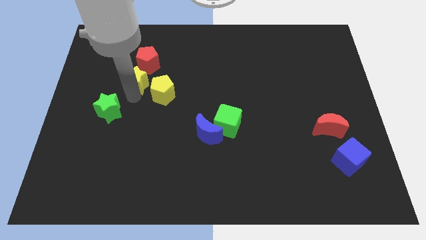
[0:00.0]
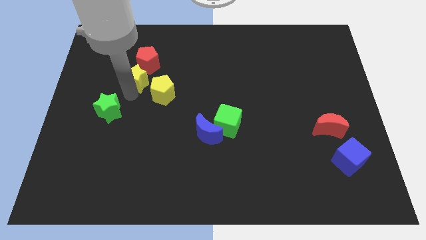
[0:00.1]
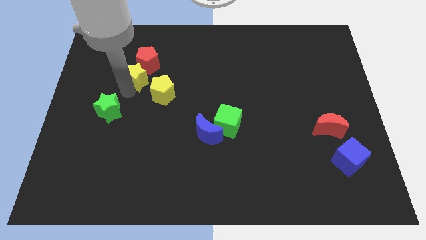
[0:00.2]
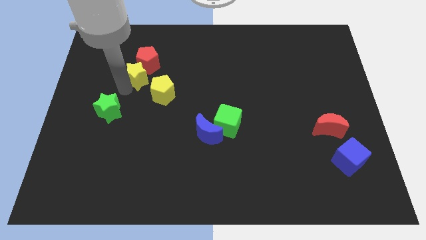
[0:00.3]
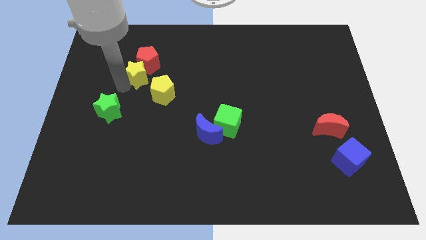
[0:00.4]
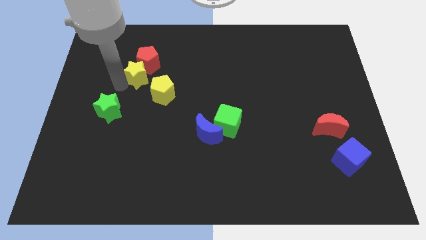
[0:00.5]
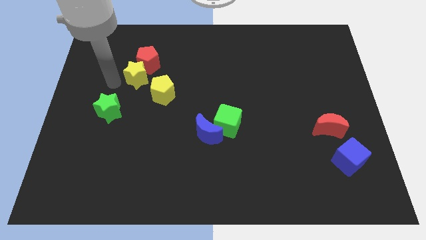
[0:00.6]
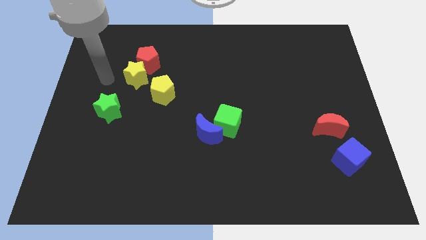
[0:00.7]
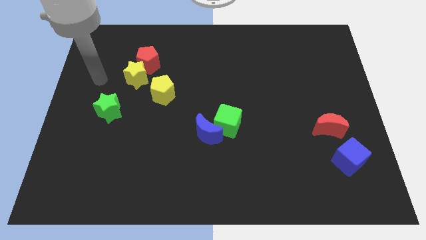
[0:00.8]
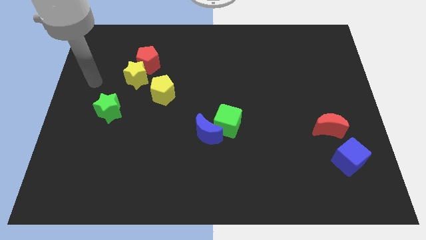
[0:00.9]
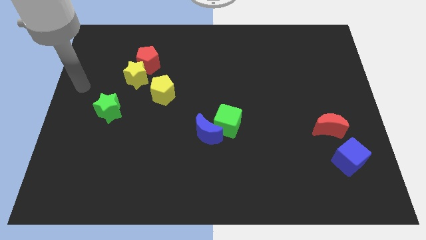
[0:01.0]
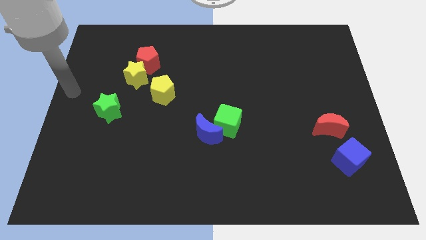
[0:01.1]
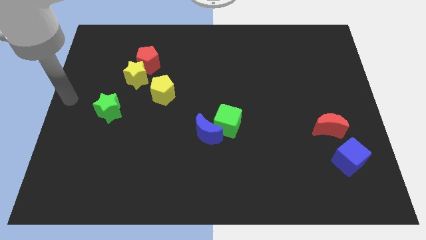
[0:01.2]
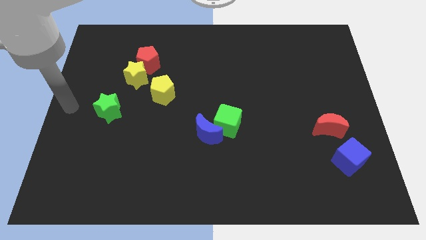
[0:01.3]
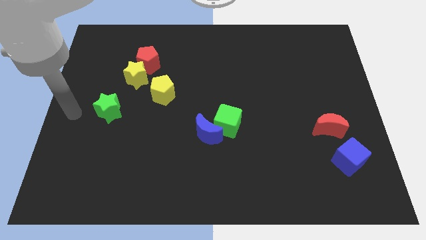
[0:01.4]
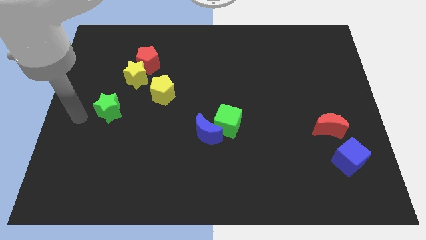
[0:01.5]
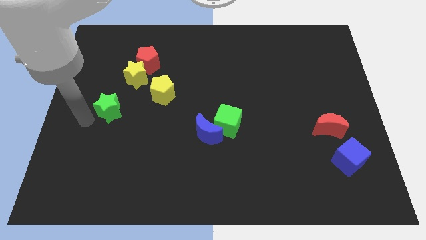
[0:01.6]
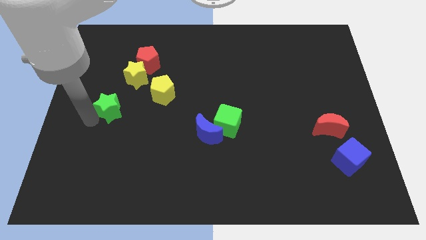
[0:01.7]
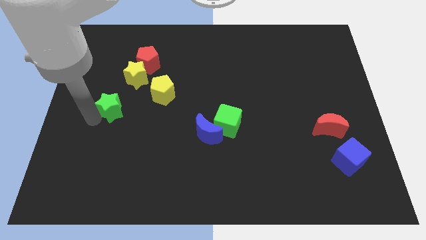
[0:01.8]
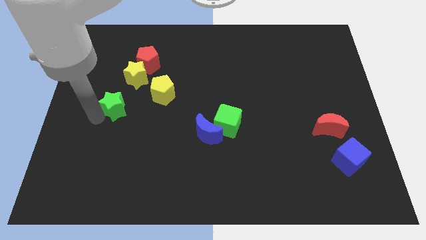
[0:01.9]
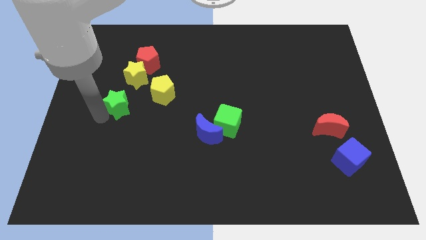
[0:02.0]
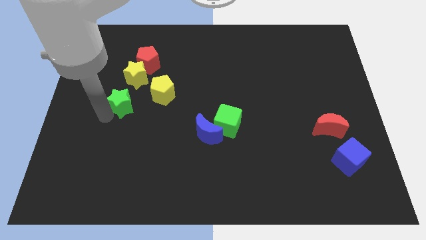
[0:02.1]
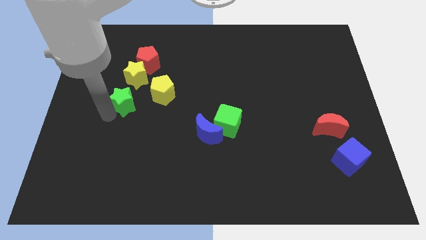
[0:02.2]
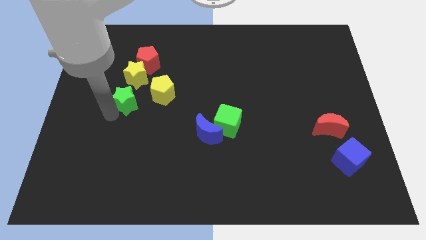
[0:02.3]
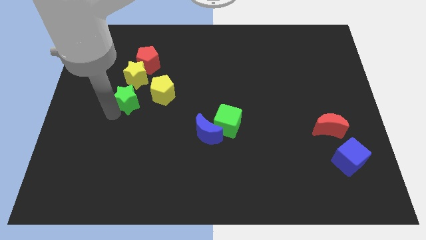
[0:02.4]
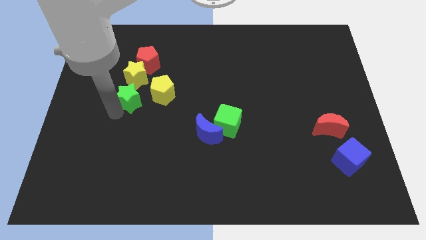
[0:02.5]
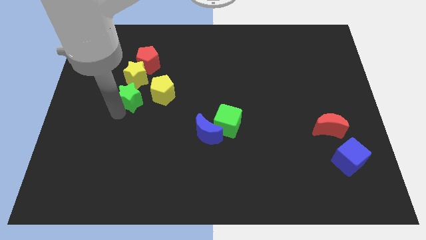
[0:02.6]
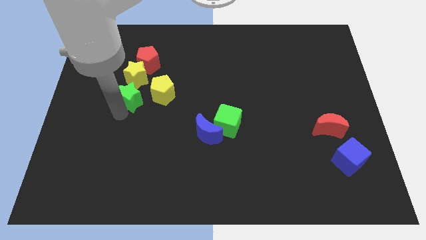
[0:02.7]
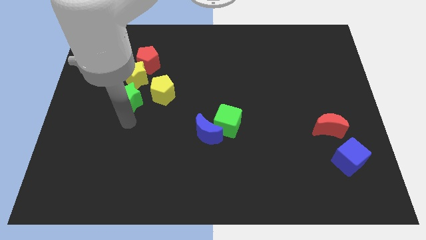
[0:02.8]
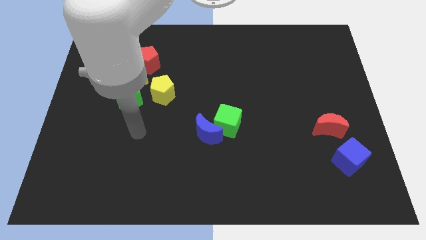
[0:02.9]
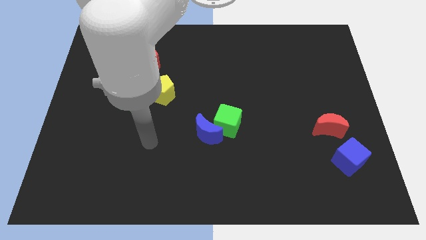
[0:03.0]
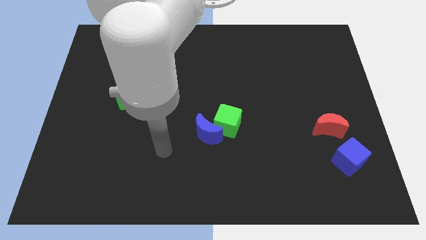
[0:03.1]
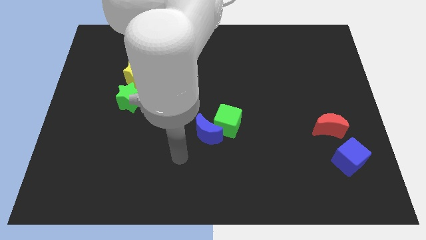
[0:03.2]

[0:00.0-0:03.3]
move the green star below the yellow star

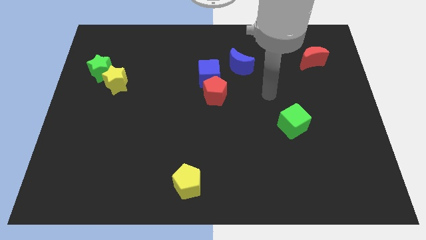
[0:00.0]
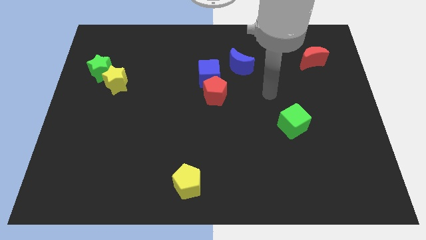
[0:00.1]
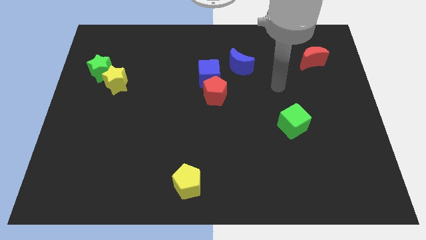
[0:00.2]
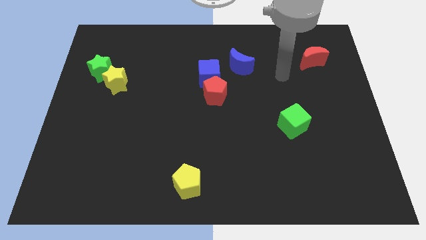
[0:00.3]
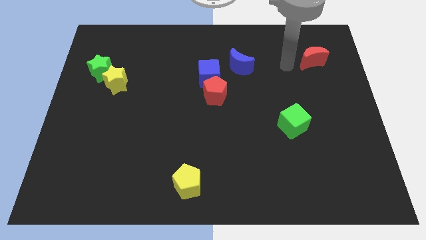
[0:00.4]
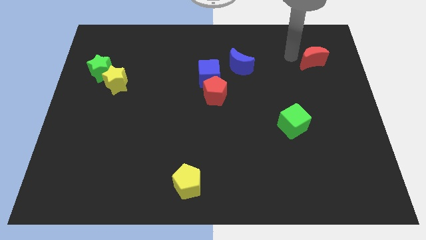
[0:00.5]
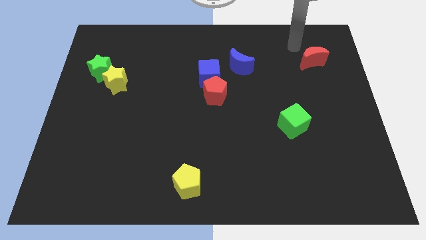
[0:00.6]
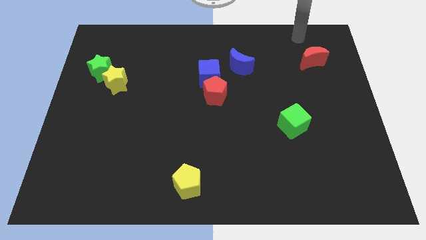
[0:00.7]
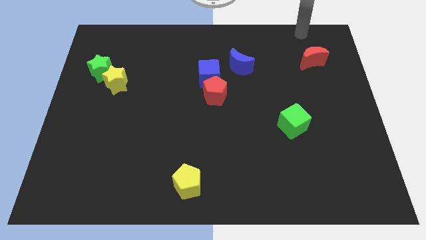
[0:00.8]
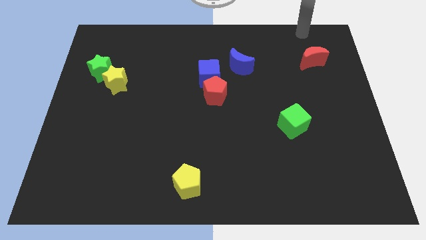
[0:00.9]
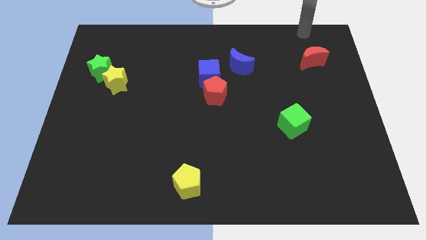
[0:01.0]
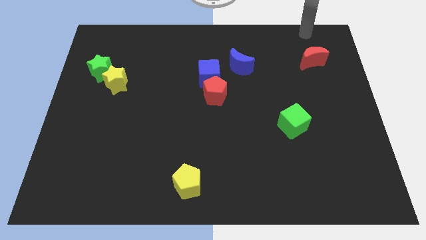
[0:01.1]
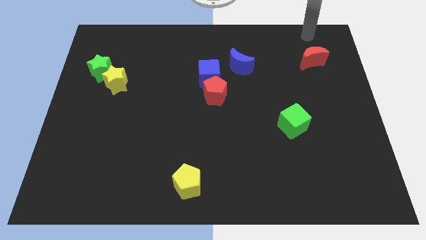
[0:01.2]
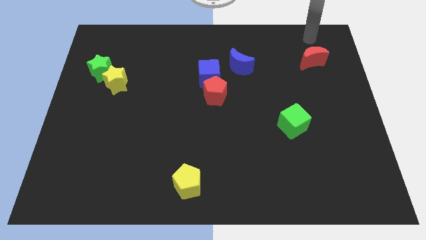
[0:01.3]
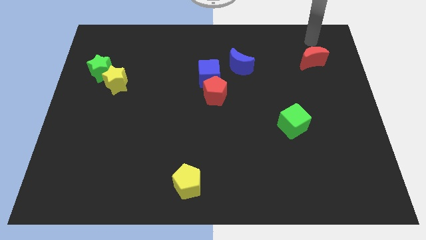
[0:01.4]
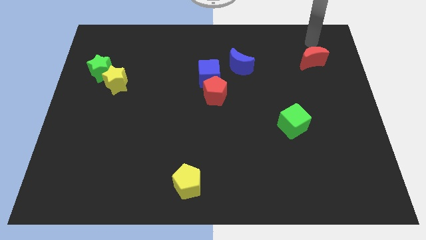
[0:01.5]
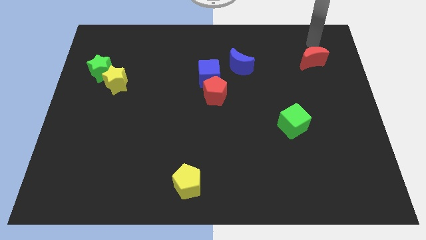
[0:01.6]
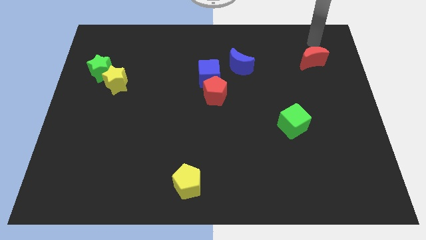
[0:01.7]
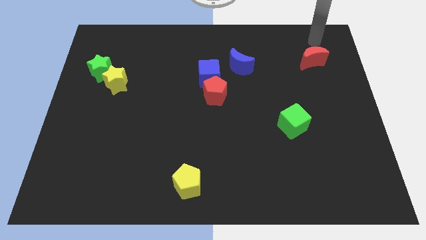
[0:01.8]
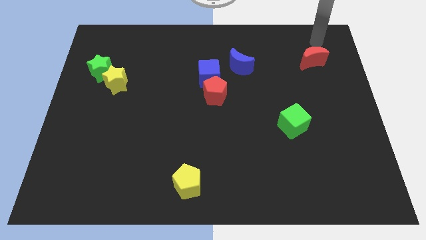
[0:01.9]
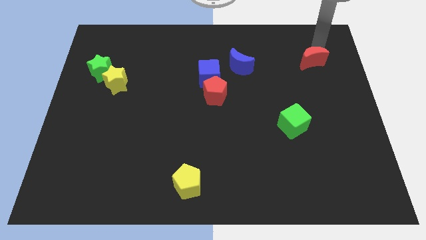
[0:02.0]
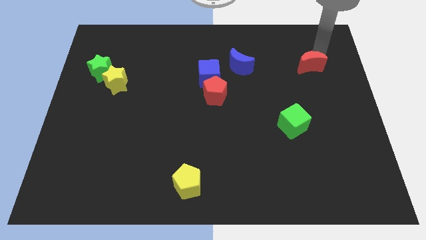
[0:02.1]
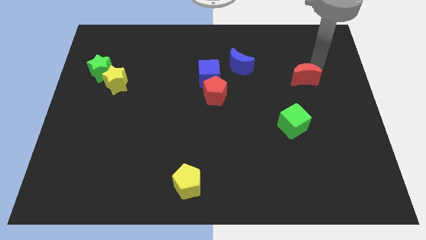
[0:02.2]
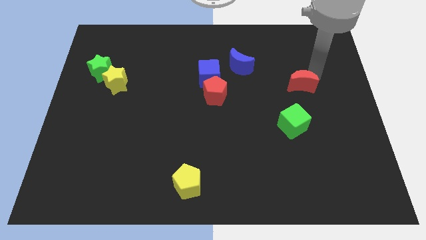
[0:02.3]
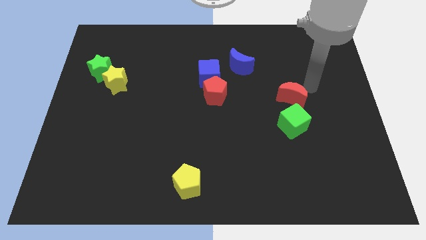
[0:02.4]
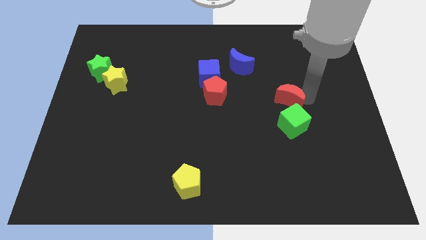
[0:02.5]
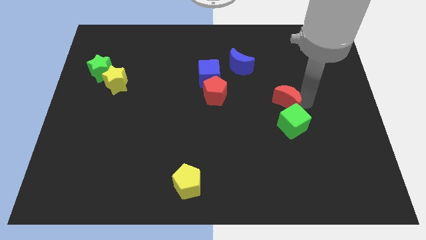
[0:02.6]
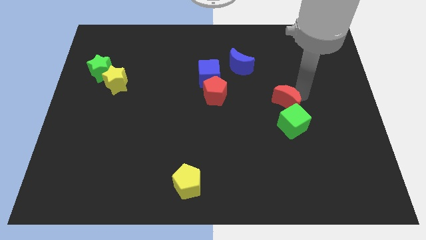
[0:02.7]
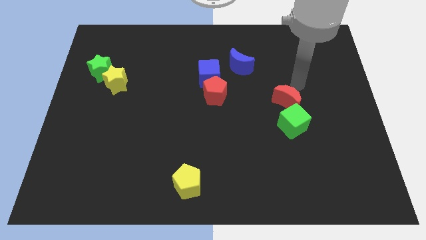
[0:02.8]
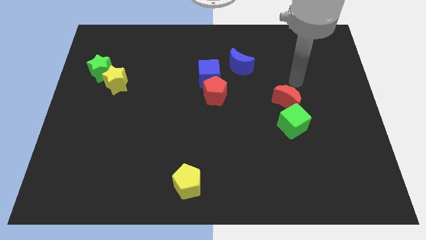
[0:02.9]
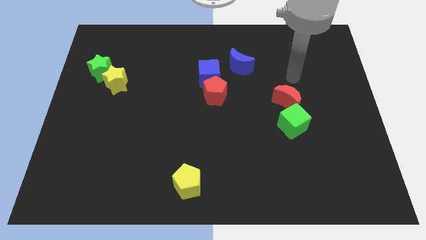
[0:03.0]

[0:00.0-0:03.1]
move the red moon into the top side of the green cube

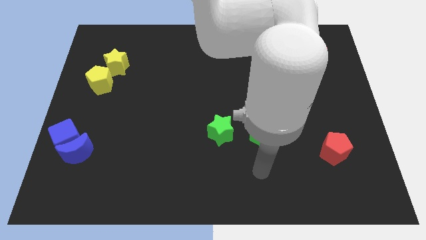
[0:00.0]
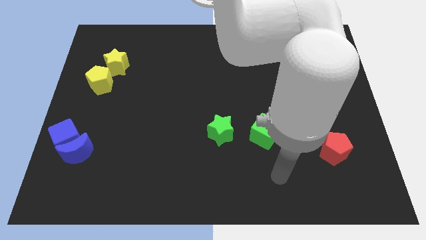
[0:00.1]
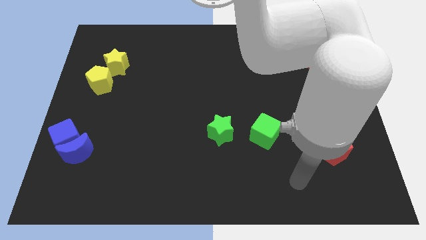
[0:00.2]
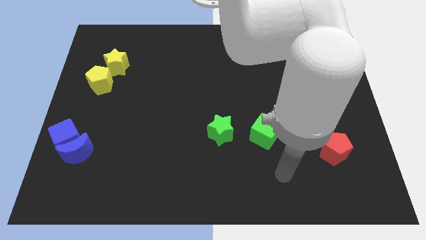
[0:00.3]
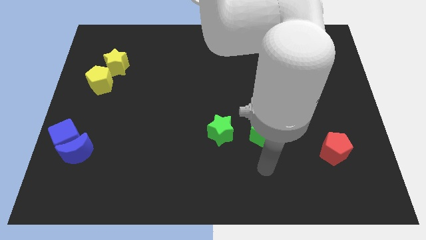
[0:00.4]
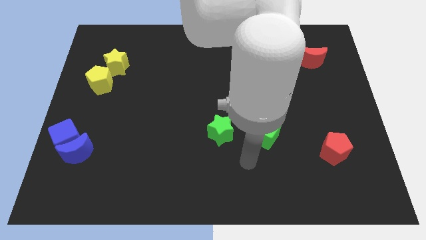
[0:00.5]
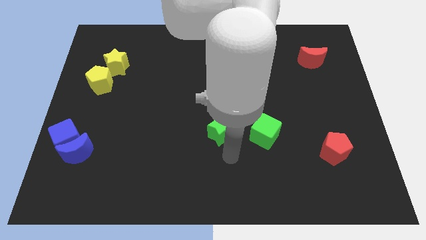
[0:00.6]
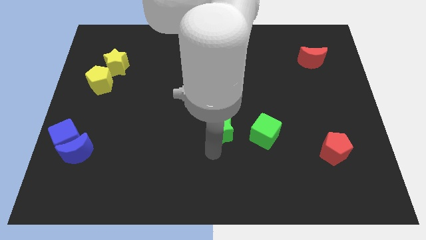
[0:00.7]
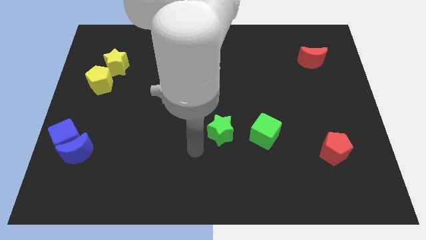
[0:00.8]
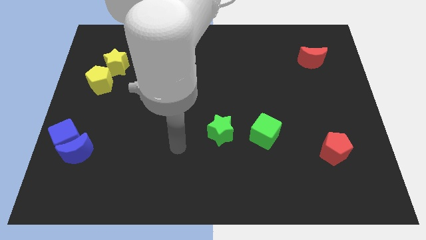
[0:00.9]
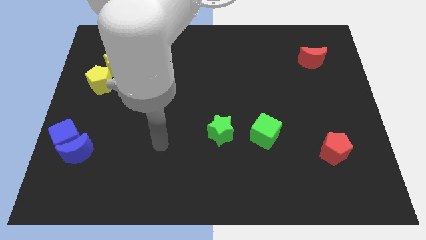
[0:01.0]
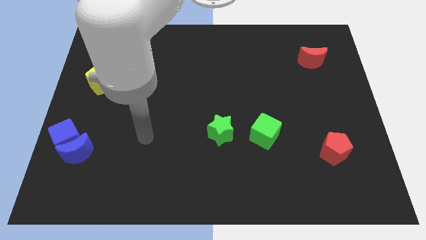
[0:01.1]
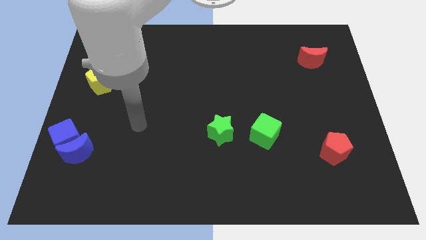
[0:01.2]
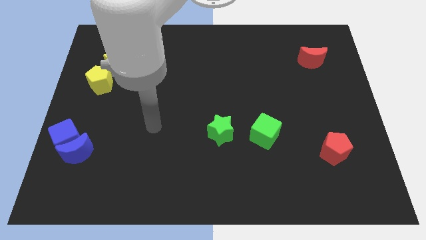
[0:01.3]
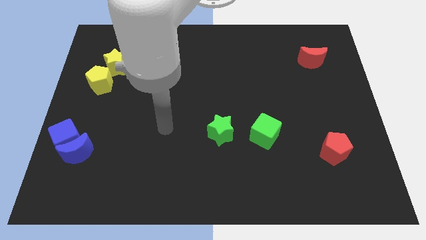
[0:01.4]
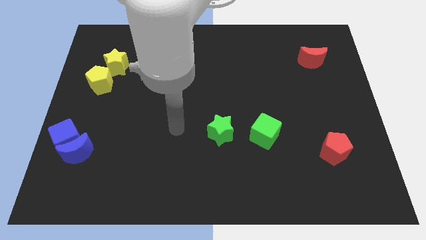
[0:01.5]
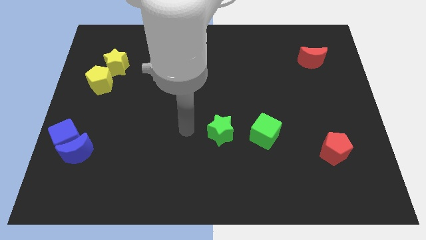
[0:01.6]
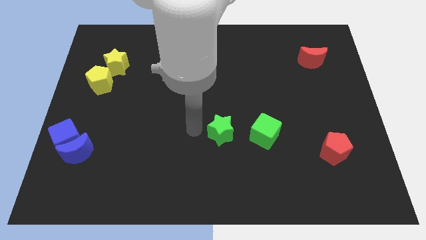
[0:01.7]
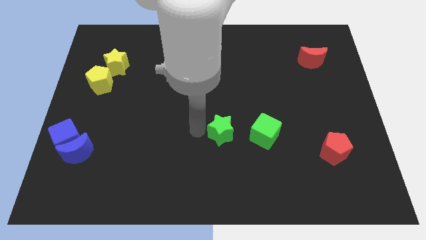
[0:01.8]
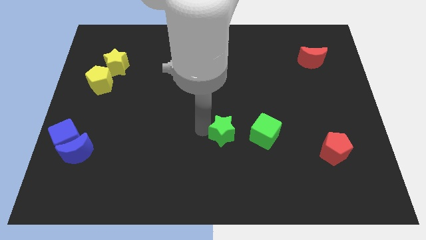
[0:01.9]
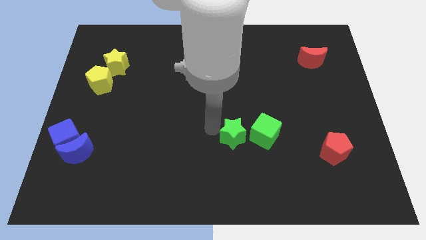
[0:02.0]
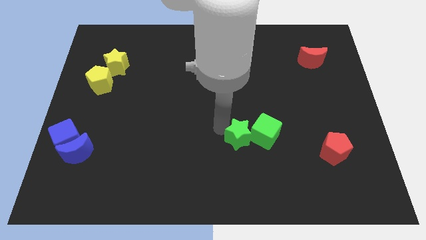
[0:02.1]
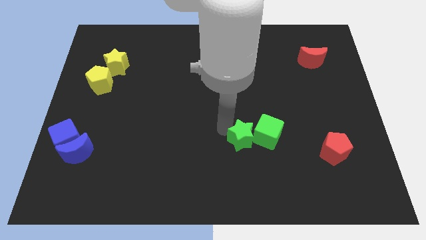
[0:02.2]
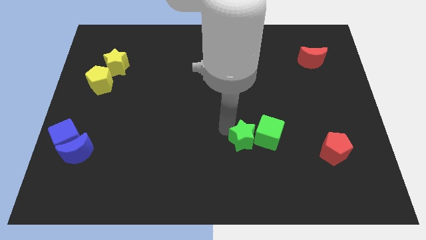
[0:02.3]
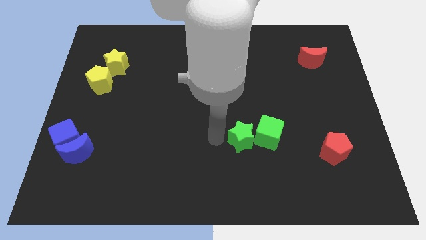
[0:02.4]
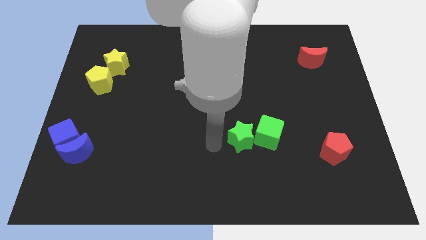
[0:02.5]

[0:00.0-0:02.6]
push the green star towards the green cube
